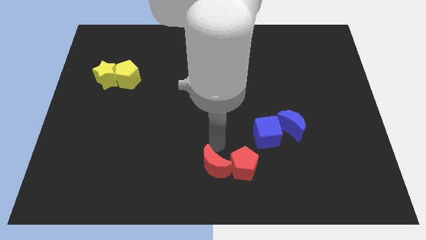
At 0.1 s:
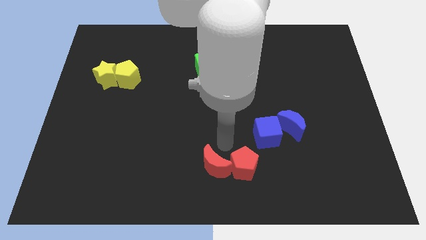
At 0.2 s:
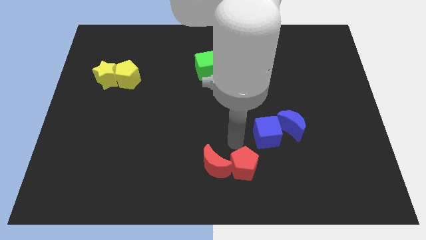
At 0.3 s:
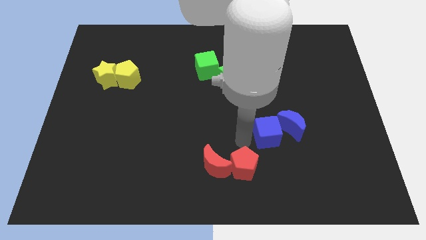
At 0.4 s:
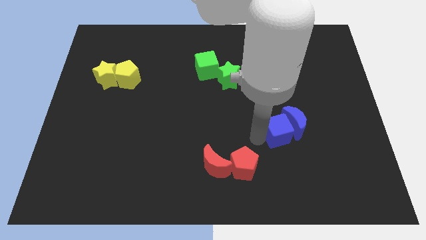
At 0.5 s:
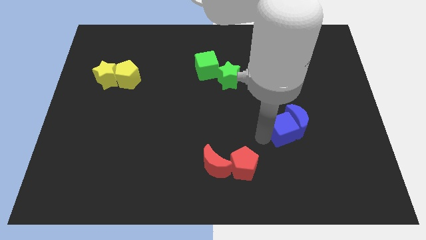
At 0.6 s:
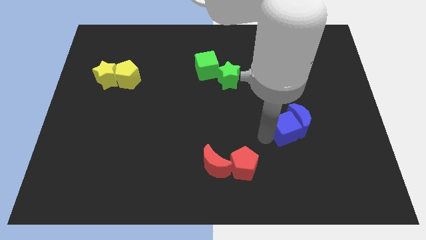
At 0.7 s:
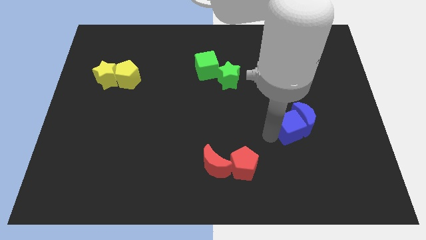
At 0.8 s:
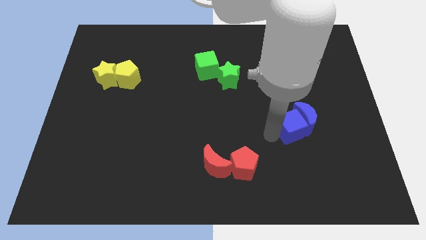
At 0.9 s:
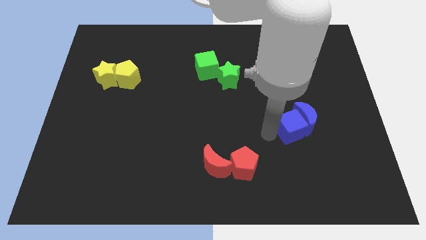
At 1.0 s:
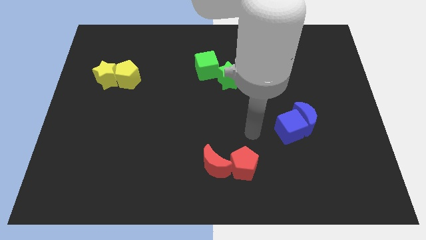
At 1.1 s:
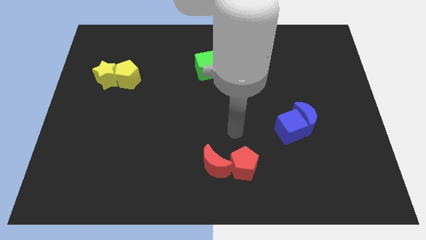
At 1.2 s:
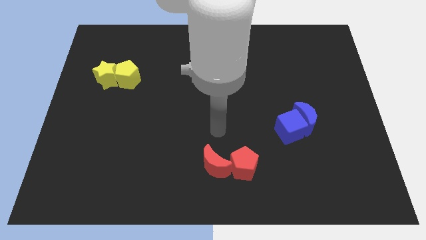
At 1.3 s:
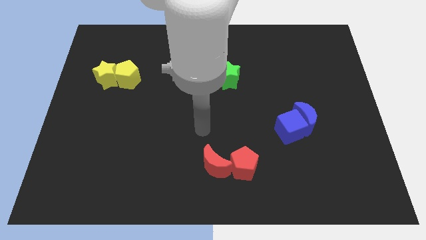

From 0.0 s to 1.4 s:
push blue cube into the blue crescent

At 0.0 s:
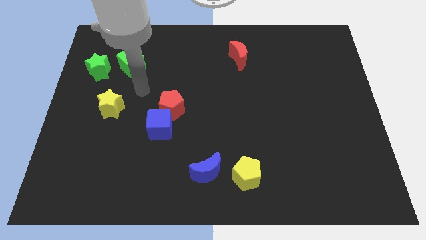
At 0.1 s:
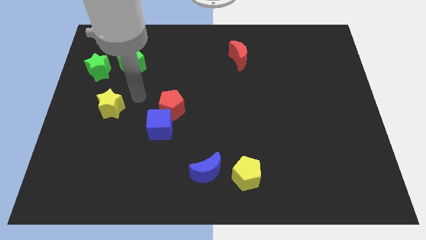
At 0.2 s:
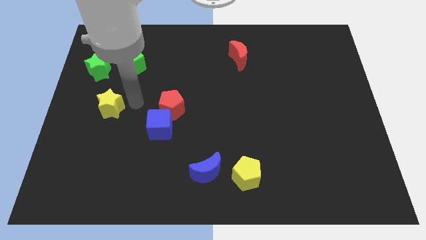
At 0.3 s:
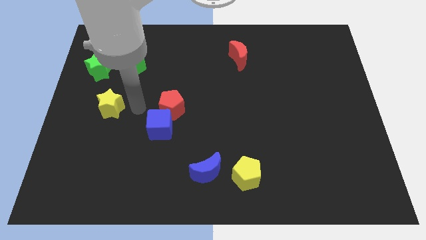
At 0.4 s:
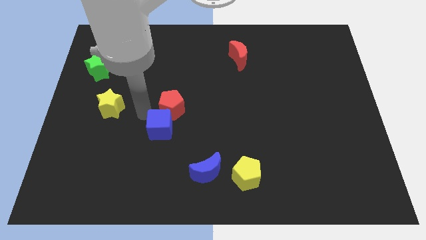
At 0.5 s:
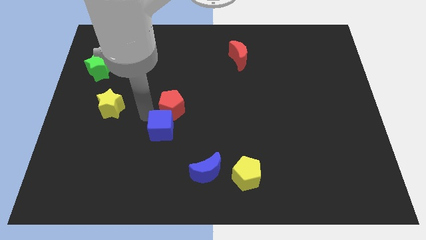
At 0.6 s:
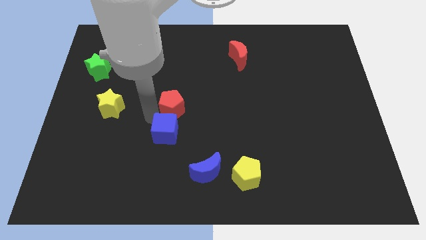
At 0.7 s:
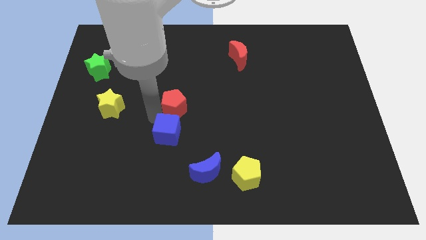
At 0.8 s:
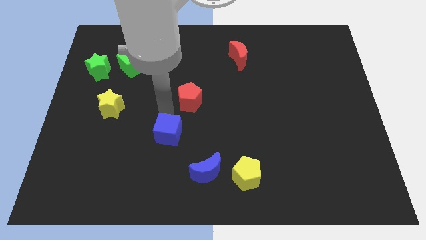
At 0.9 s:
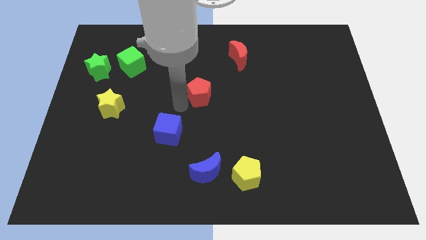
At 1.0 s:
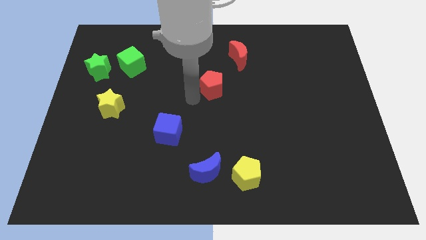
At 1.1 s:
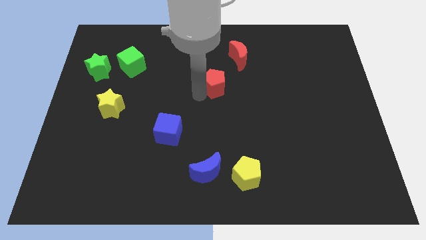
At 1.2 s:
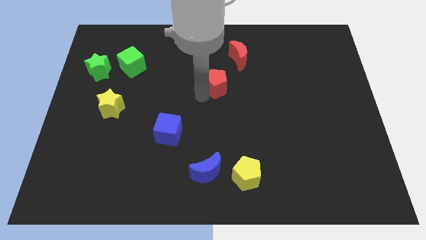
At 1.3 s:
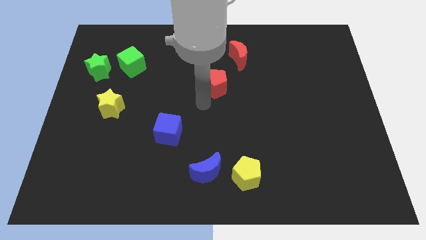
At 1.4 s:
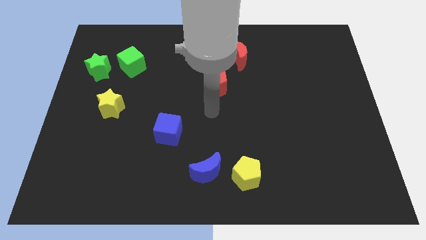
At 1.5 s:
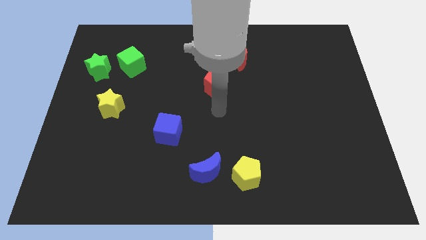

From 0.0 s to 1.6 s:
separate the red pentagon from the blue cube

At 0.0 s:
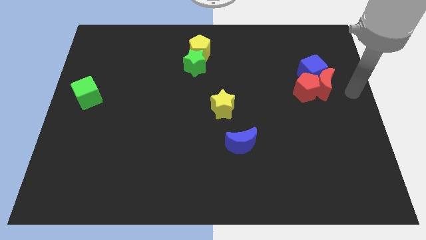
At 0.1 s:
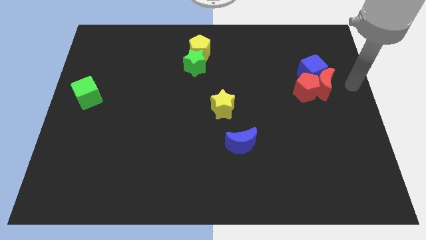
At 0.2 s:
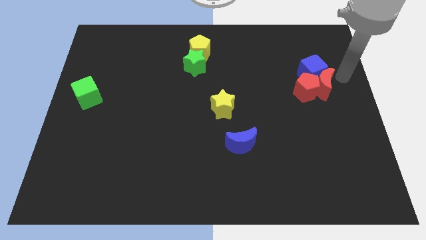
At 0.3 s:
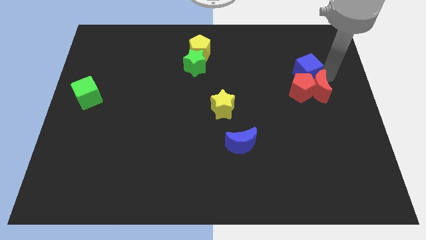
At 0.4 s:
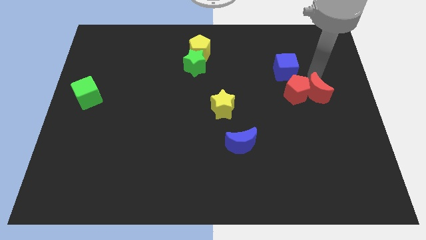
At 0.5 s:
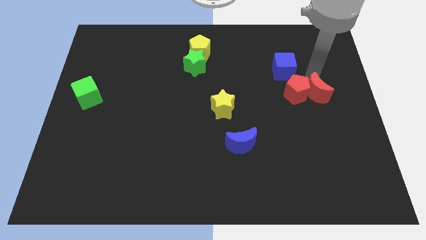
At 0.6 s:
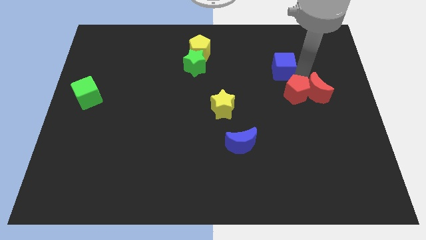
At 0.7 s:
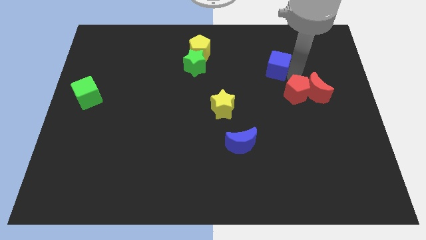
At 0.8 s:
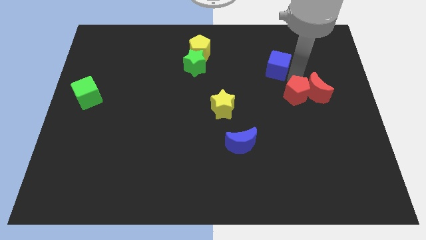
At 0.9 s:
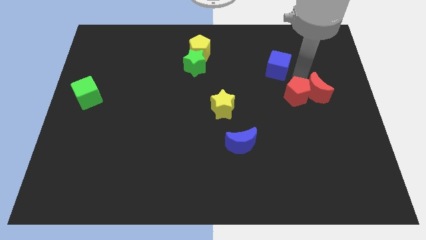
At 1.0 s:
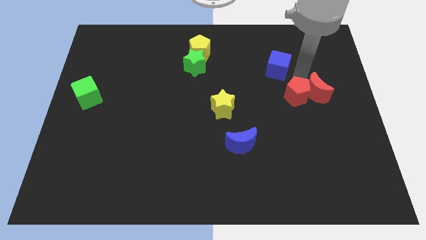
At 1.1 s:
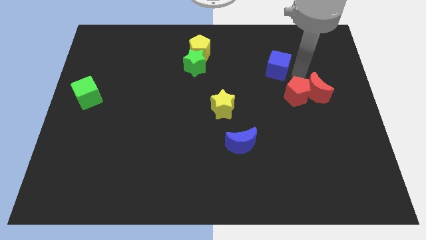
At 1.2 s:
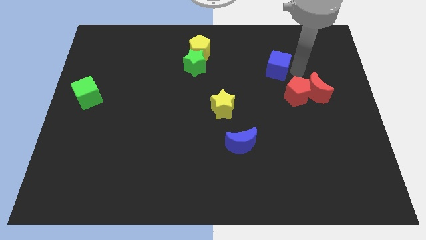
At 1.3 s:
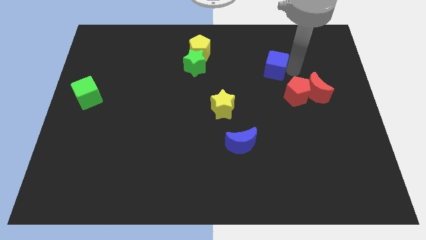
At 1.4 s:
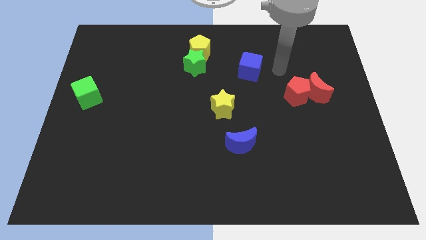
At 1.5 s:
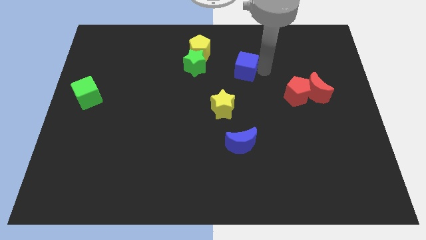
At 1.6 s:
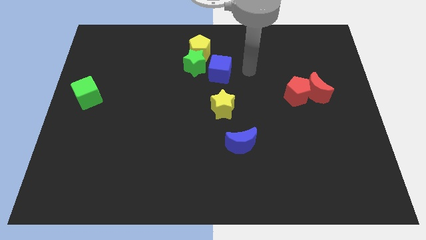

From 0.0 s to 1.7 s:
separate blue cube from the group of blocks

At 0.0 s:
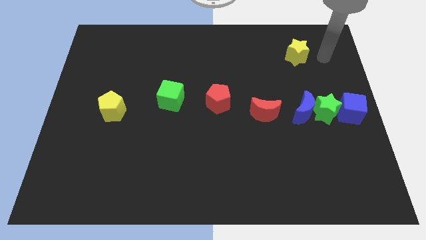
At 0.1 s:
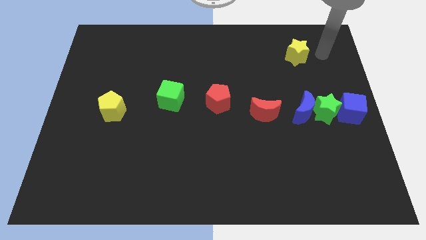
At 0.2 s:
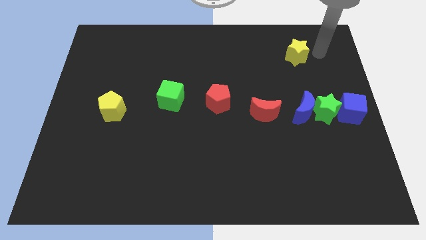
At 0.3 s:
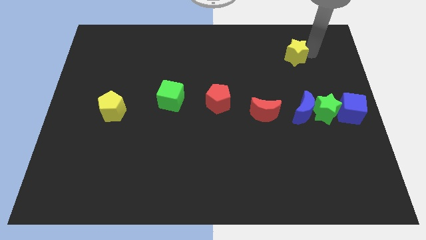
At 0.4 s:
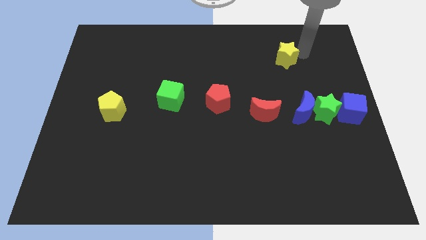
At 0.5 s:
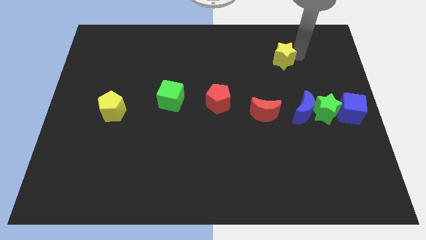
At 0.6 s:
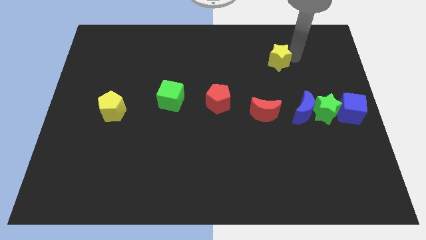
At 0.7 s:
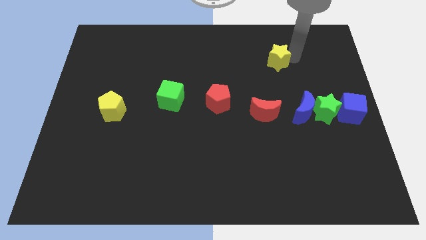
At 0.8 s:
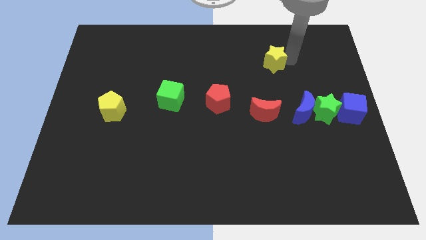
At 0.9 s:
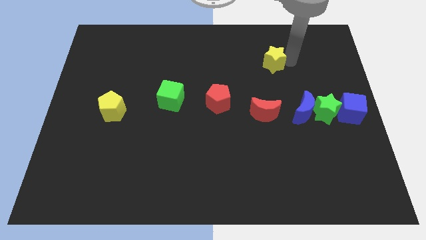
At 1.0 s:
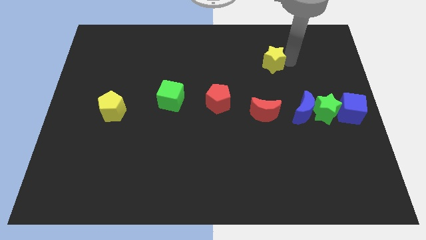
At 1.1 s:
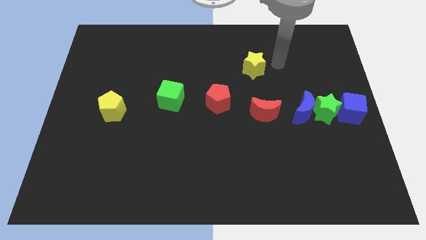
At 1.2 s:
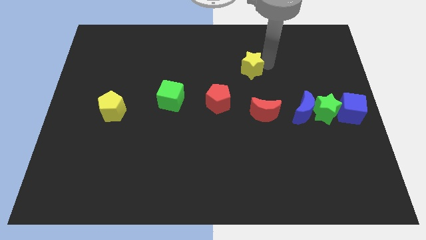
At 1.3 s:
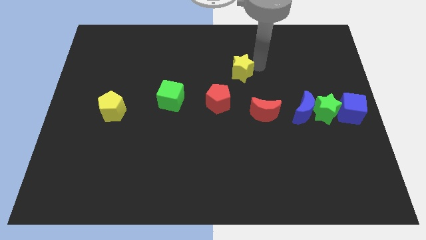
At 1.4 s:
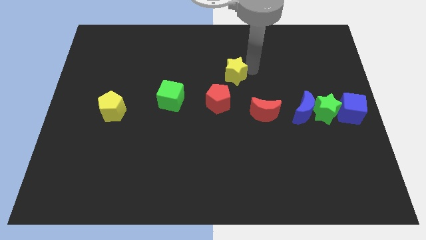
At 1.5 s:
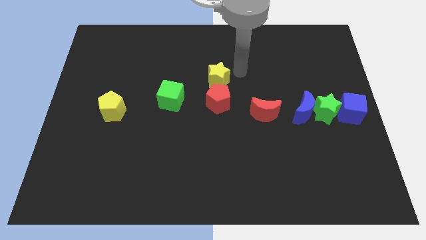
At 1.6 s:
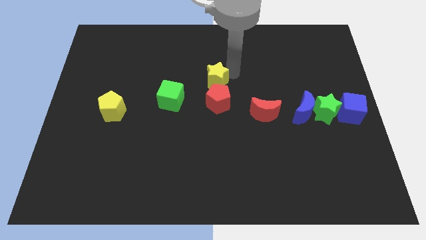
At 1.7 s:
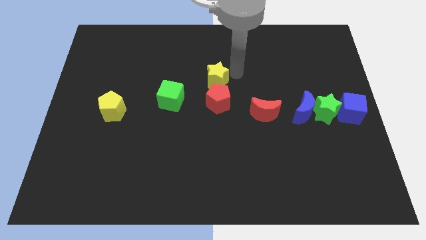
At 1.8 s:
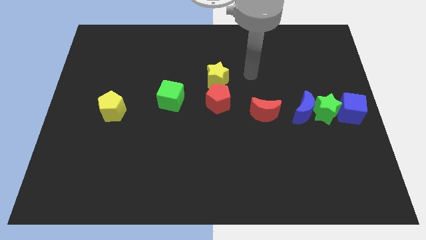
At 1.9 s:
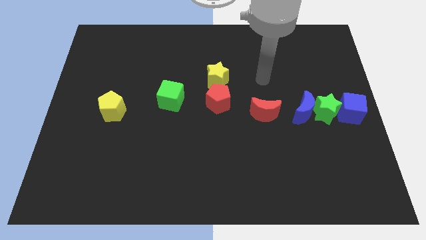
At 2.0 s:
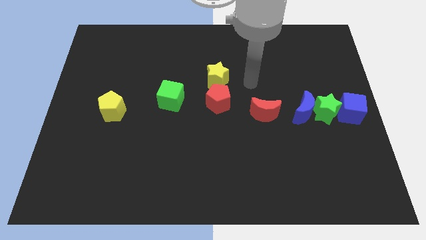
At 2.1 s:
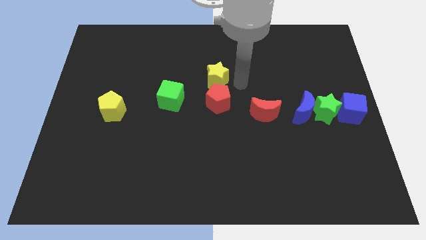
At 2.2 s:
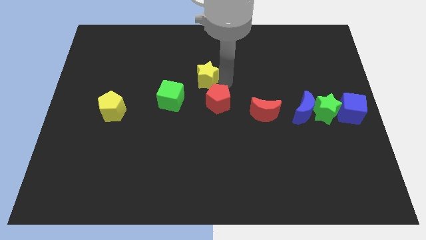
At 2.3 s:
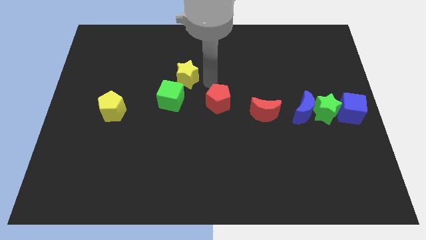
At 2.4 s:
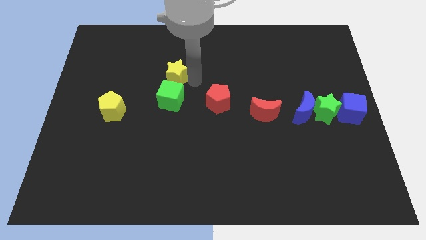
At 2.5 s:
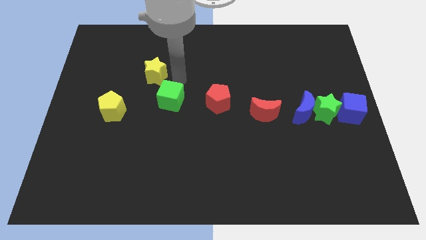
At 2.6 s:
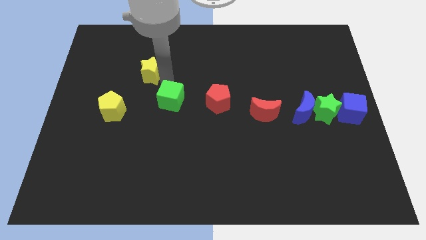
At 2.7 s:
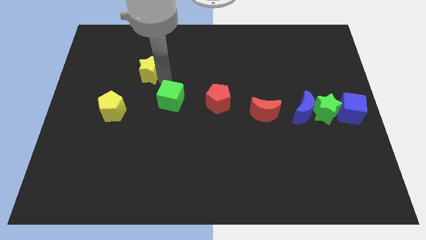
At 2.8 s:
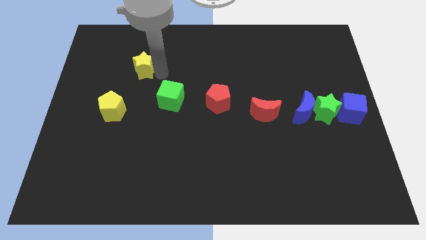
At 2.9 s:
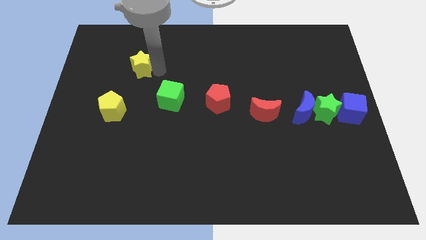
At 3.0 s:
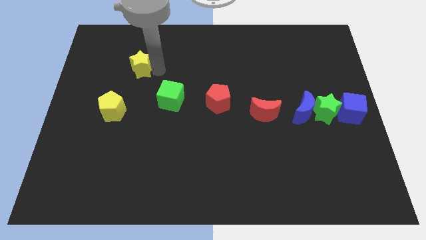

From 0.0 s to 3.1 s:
push yellow star to the top left of green cube

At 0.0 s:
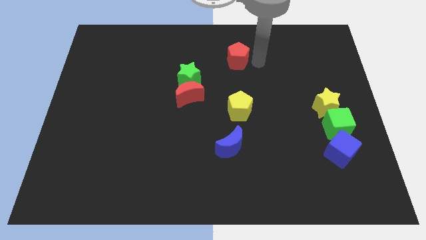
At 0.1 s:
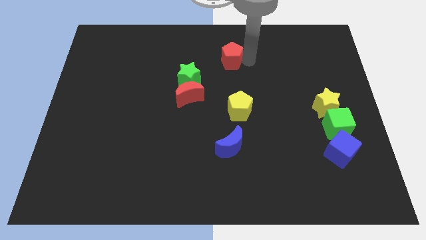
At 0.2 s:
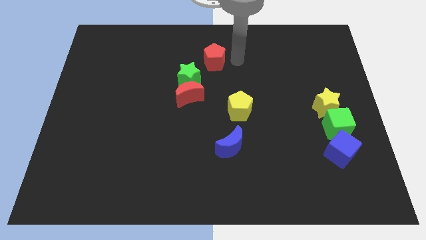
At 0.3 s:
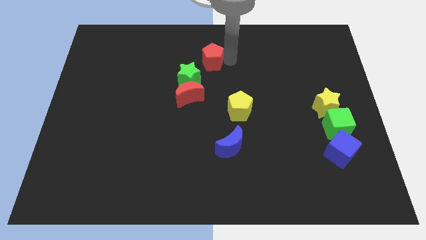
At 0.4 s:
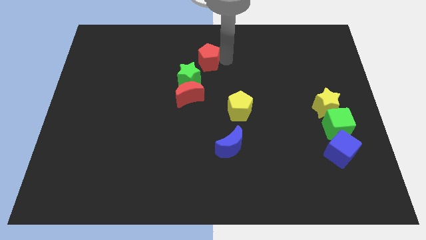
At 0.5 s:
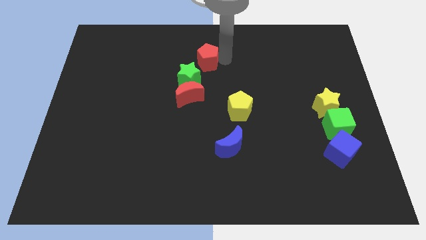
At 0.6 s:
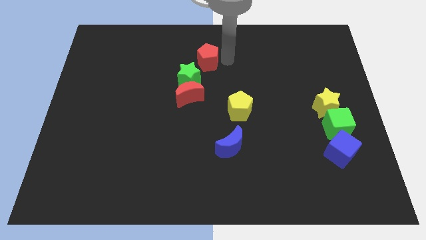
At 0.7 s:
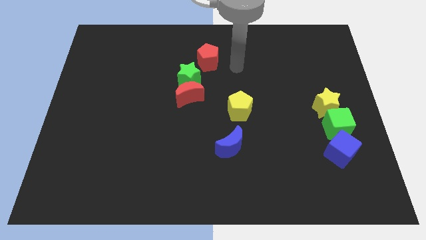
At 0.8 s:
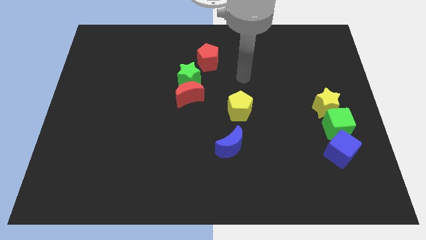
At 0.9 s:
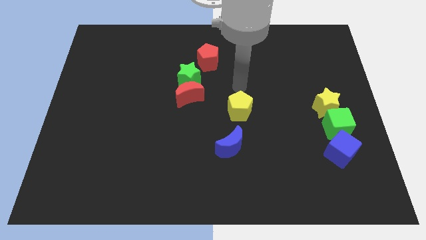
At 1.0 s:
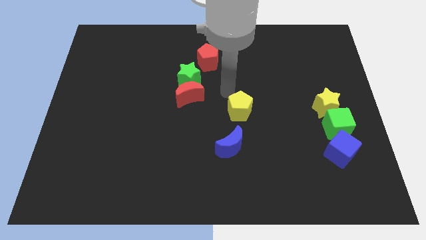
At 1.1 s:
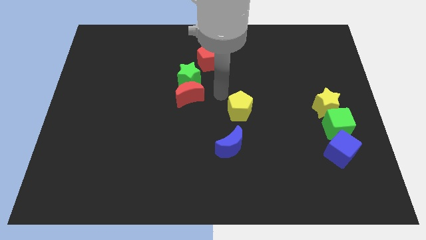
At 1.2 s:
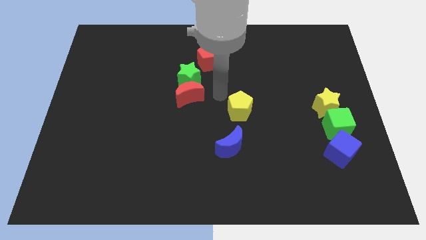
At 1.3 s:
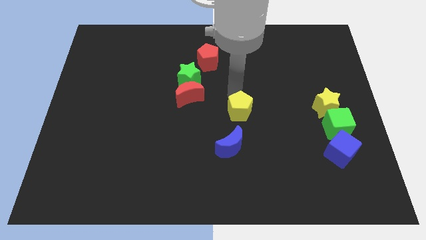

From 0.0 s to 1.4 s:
place the red pentagon above the green star
